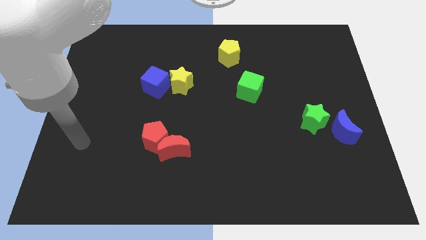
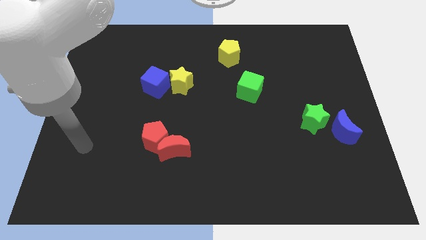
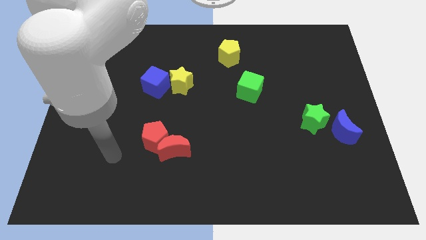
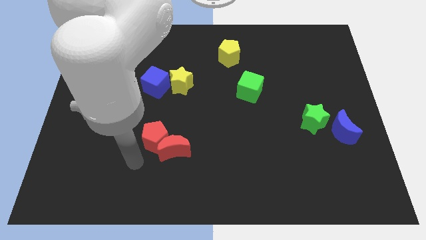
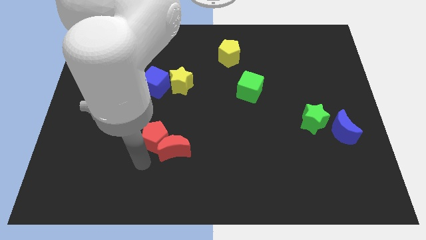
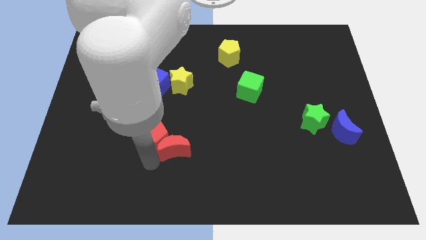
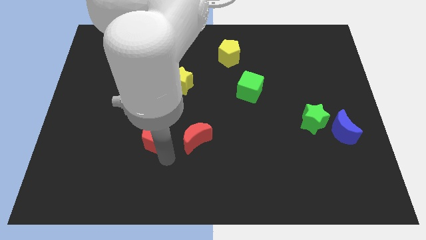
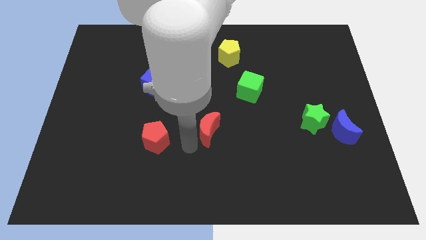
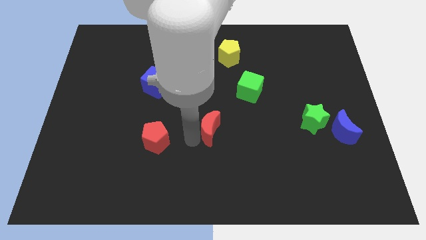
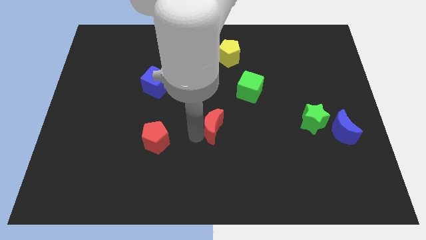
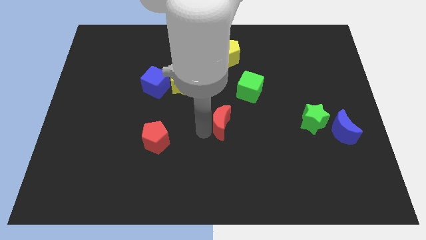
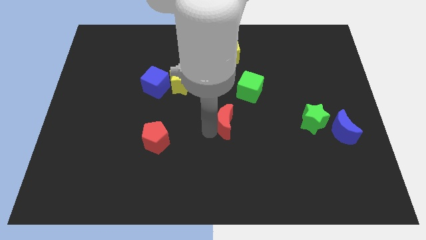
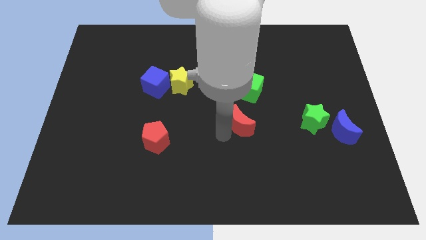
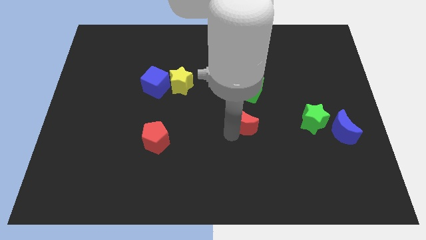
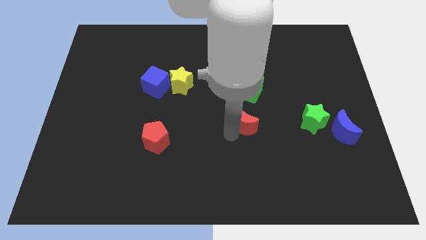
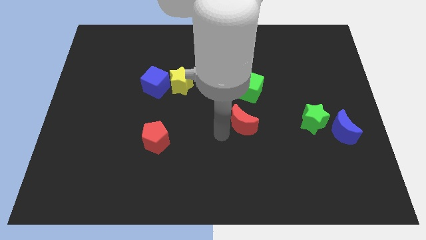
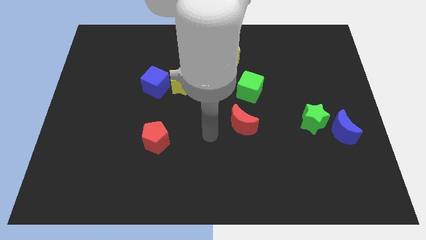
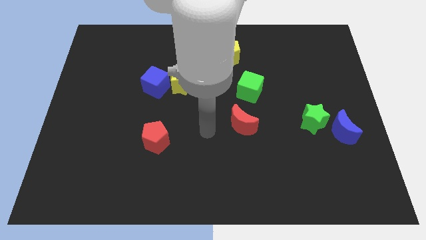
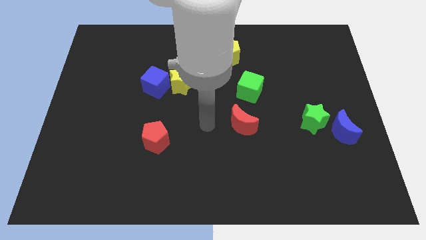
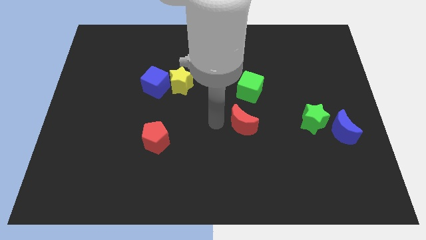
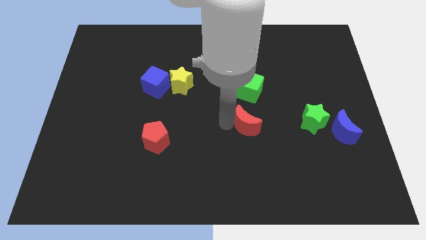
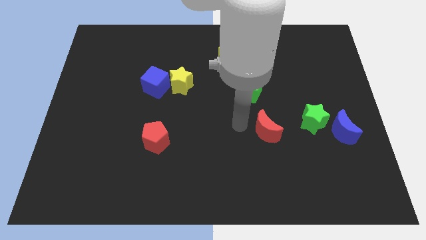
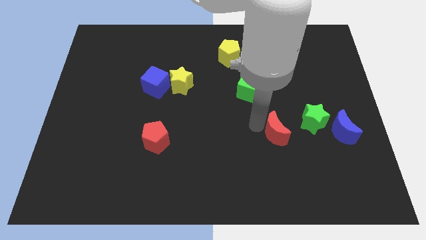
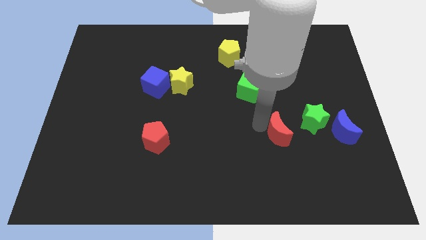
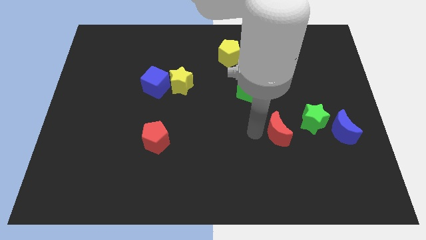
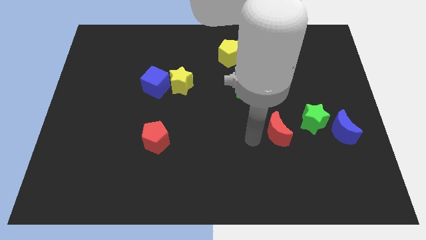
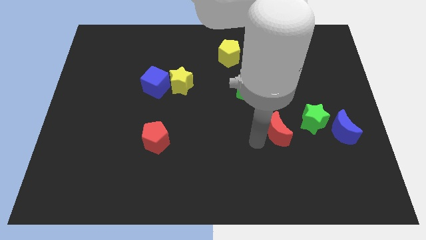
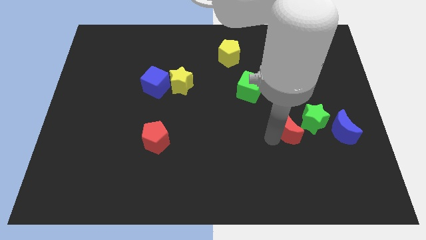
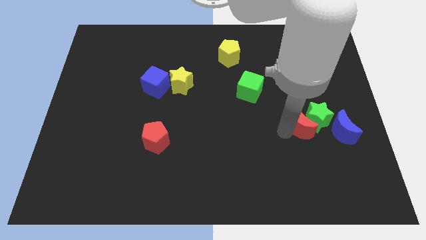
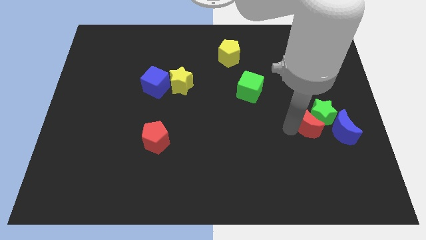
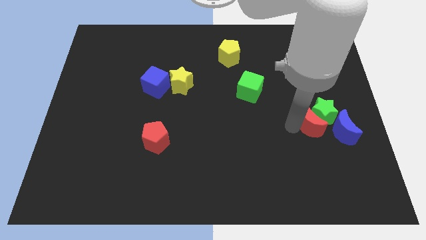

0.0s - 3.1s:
slide the red moon to the green star

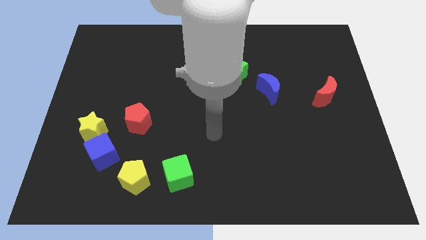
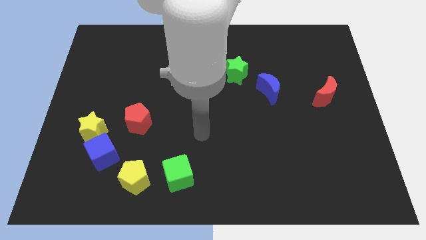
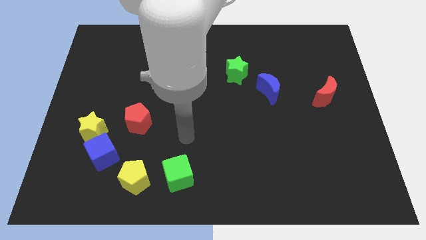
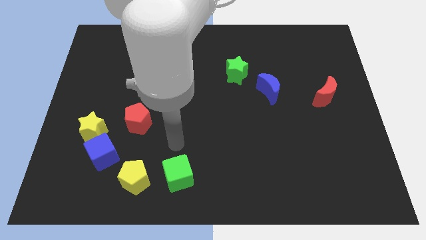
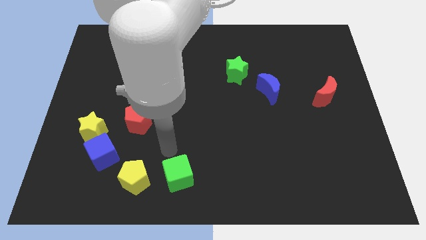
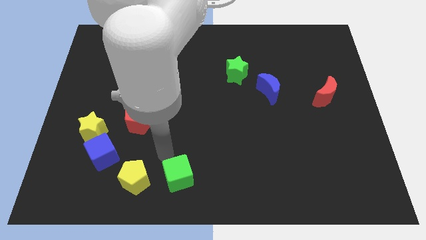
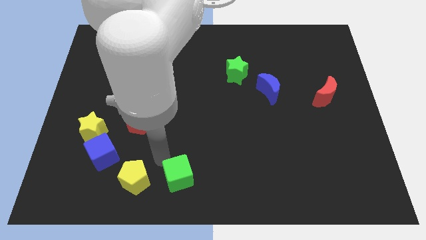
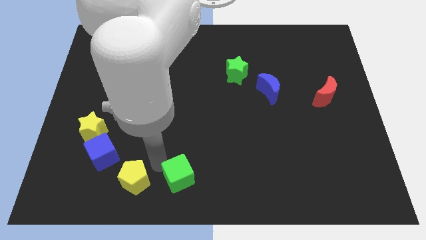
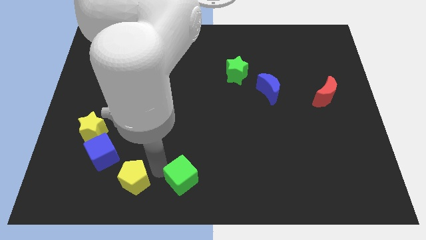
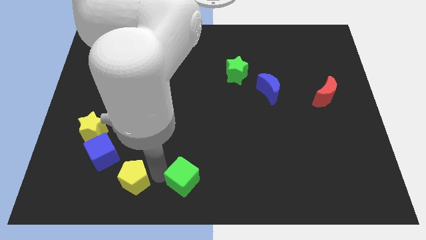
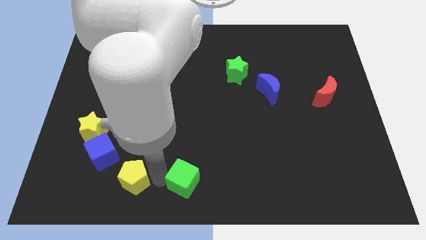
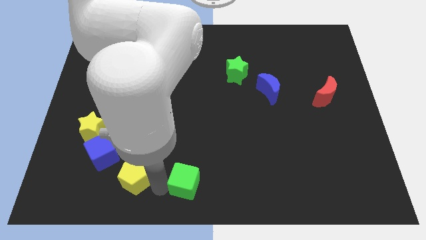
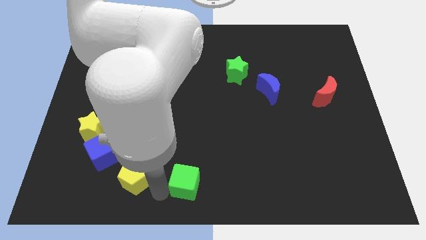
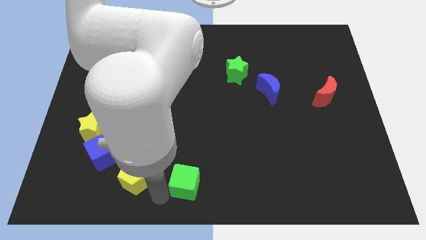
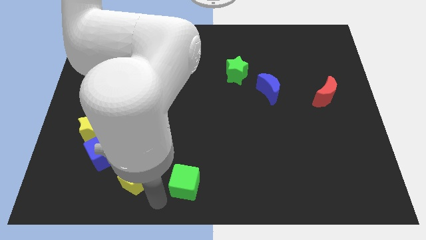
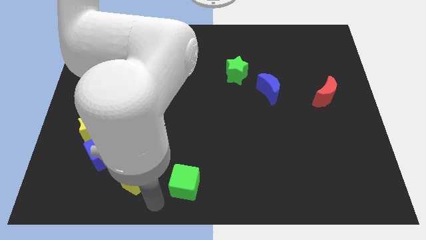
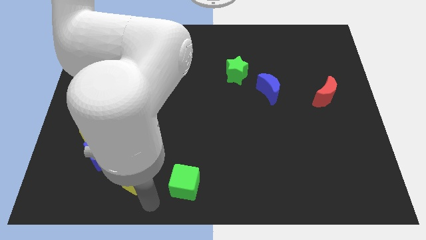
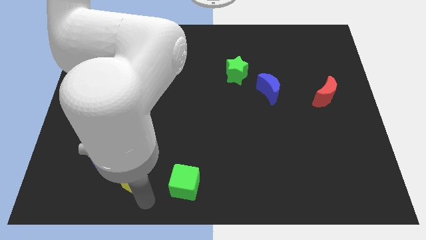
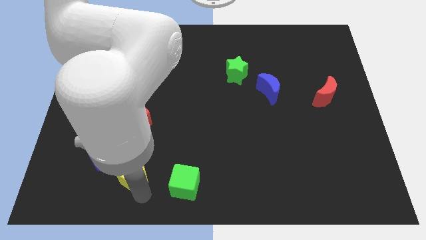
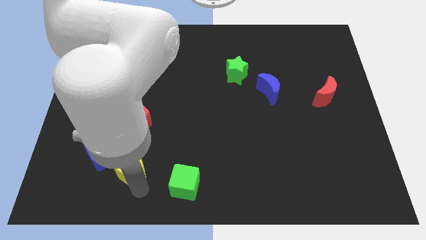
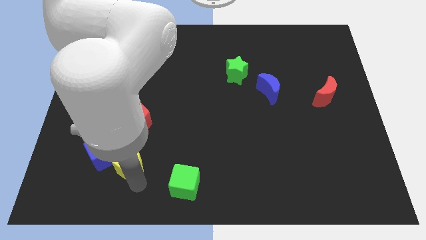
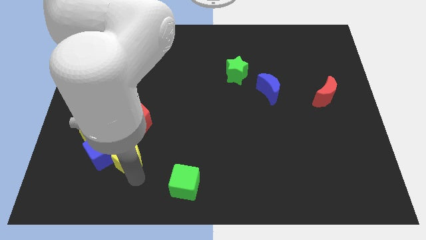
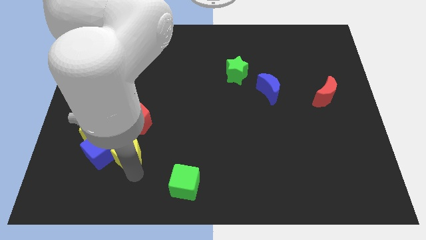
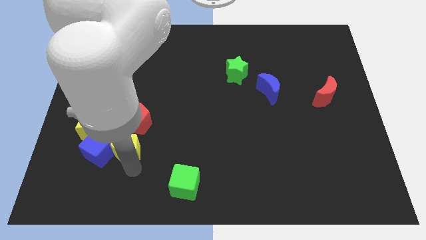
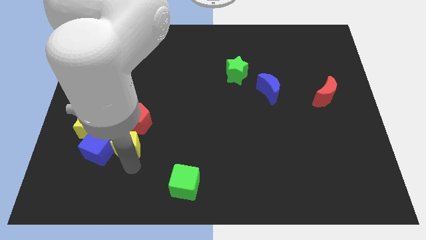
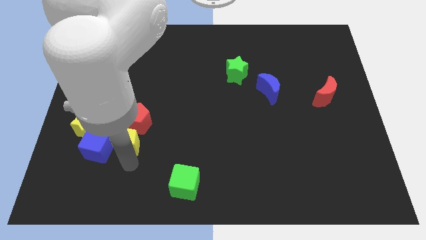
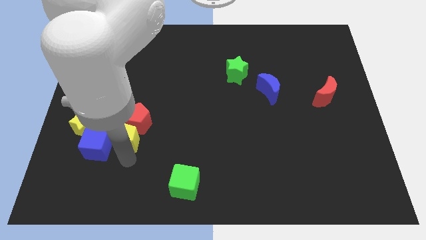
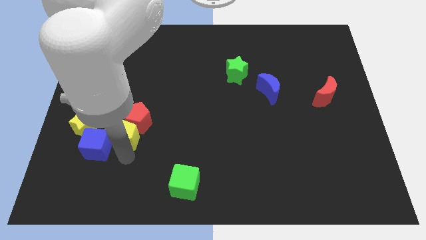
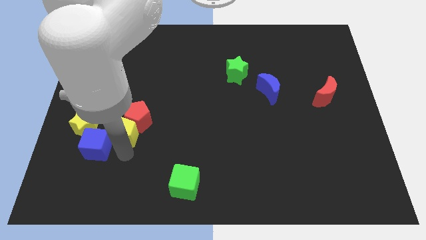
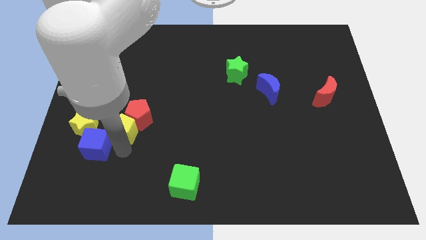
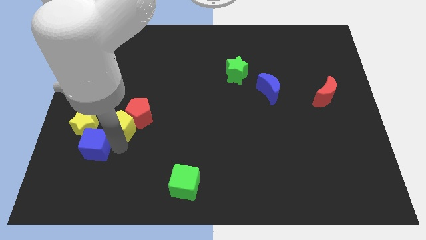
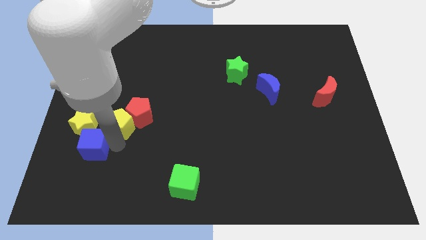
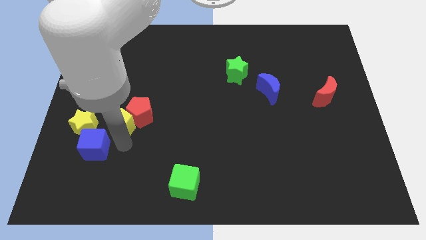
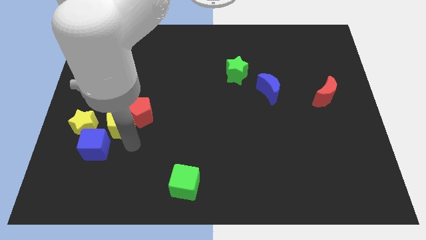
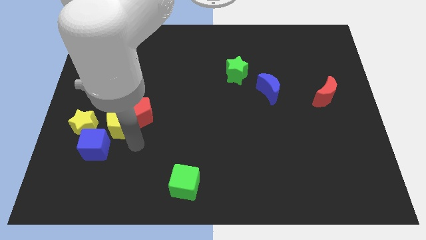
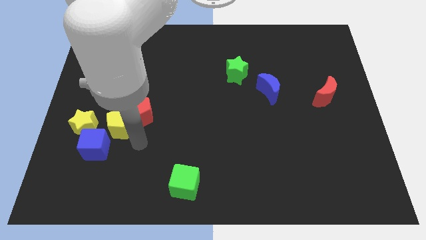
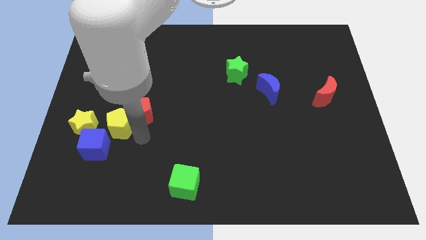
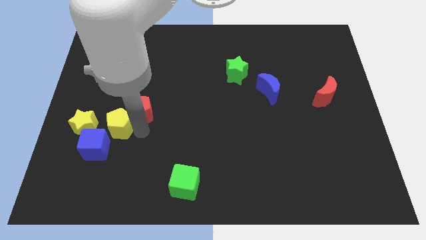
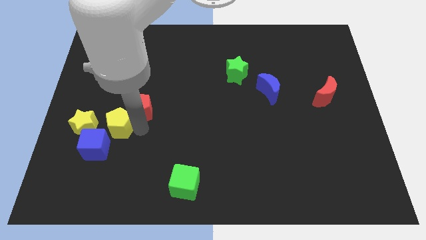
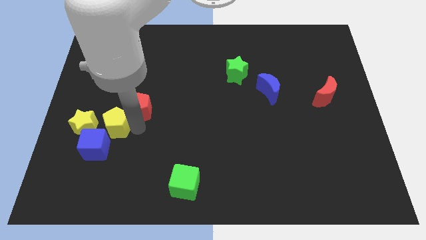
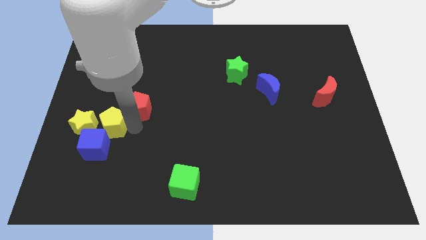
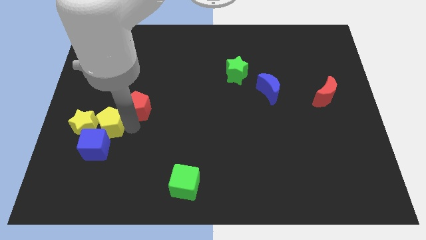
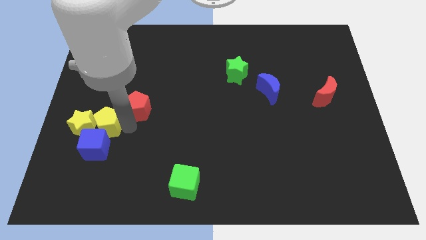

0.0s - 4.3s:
push the yellow pentagon close to the yellow star

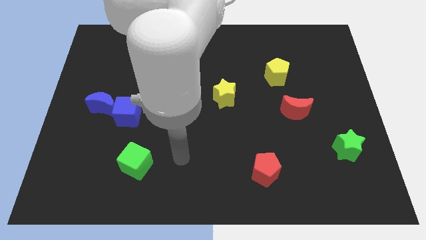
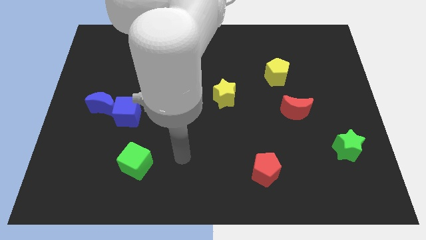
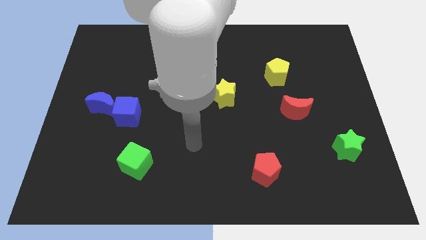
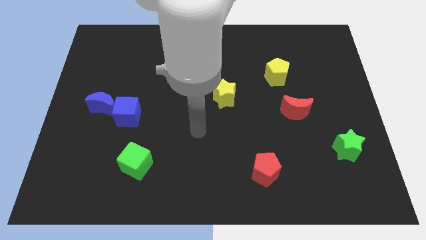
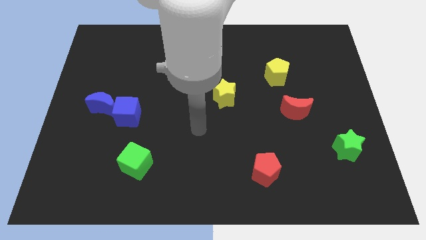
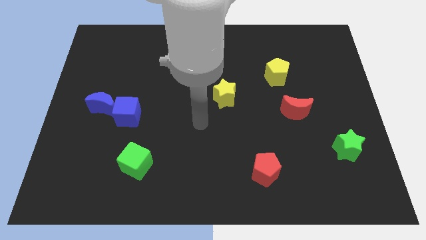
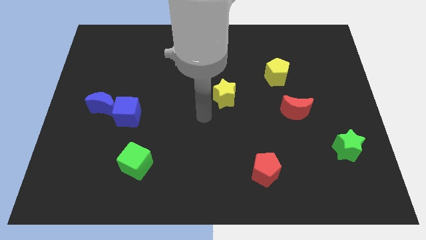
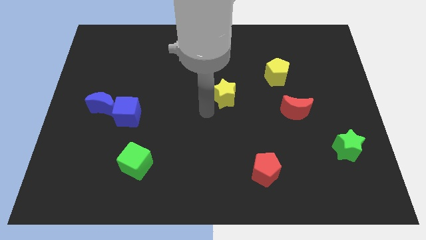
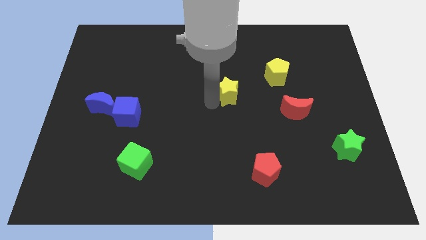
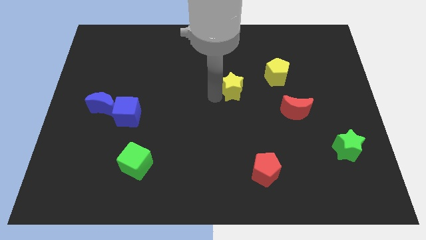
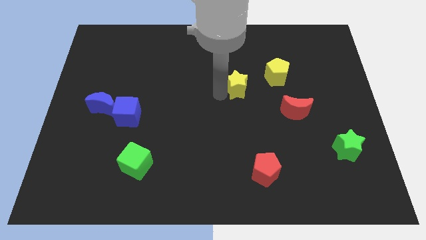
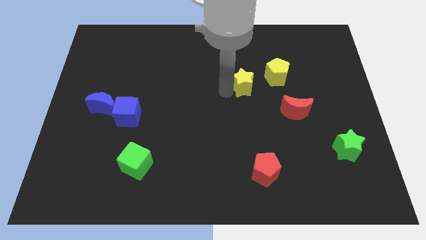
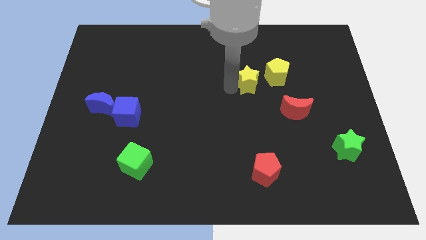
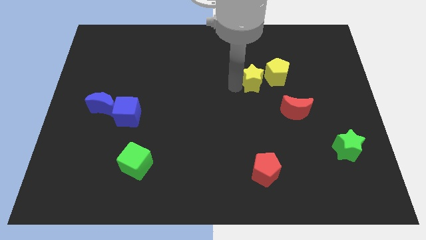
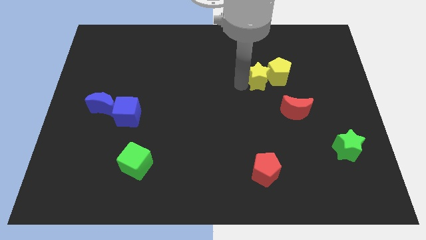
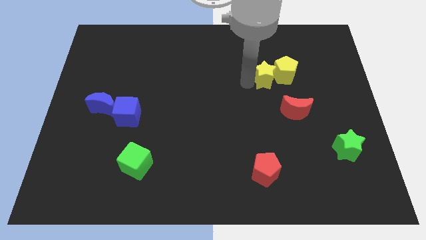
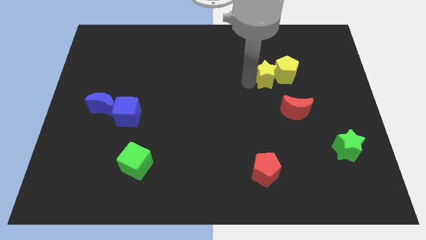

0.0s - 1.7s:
move the yellow star next to the yellow pentagon
